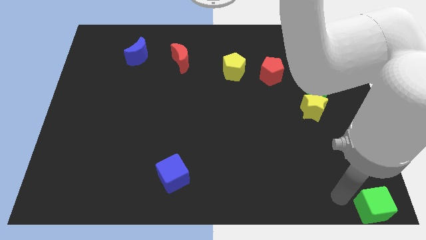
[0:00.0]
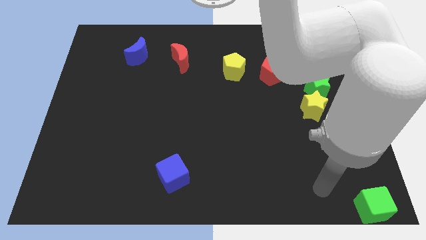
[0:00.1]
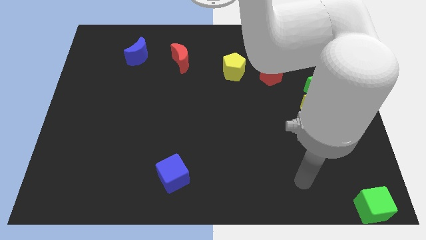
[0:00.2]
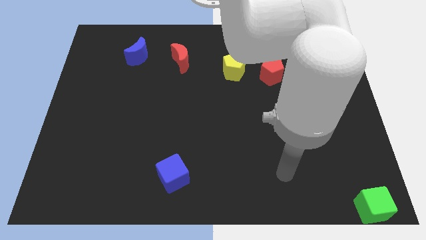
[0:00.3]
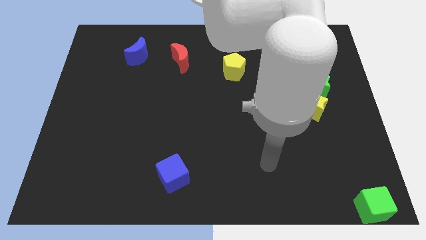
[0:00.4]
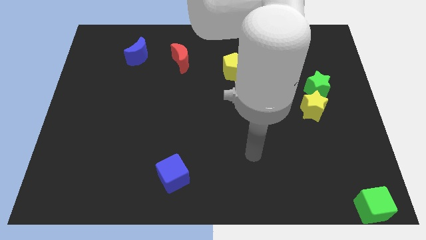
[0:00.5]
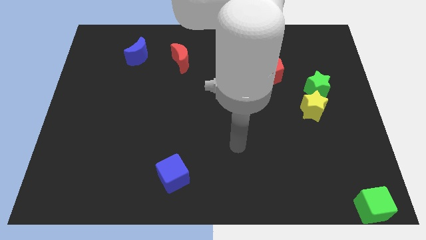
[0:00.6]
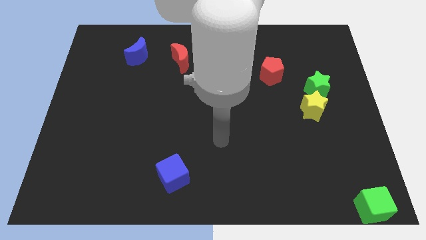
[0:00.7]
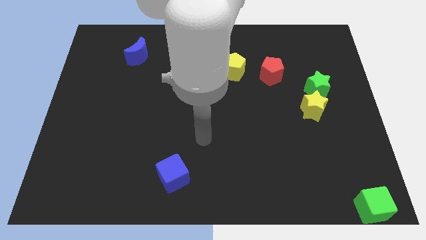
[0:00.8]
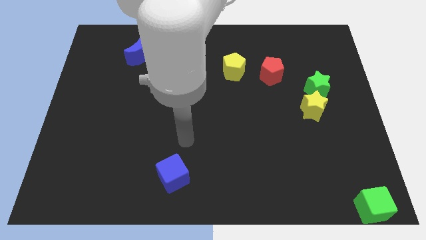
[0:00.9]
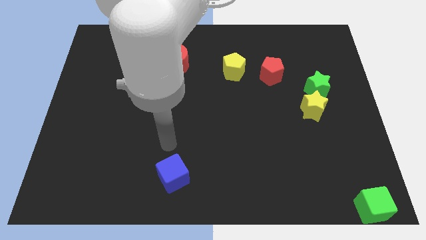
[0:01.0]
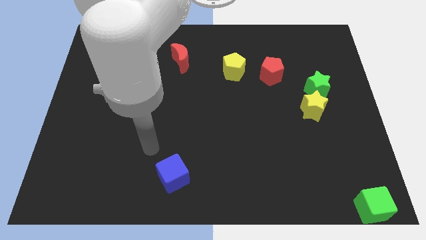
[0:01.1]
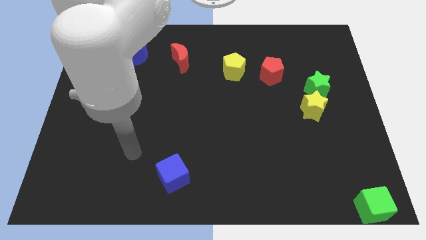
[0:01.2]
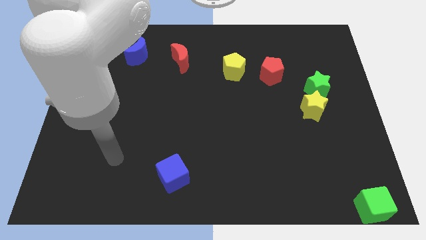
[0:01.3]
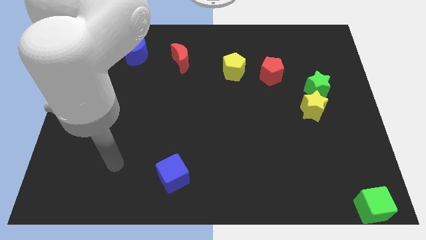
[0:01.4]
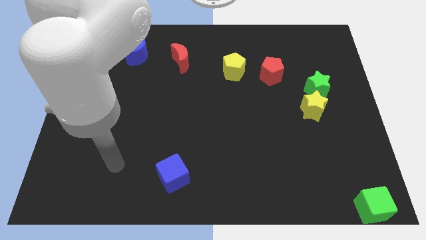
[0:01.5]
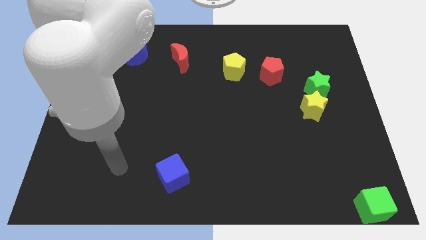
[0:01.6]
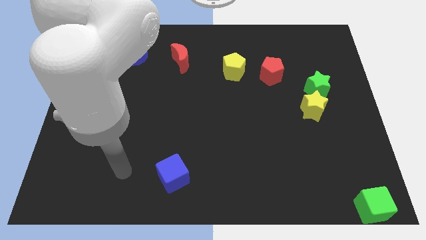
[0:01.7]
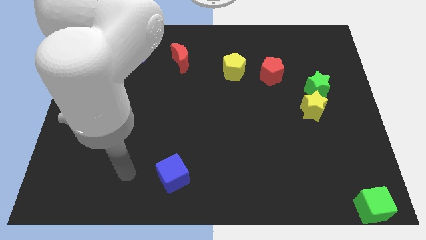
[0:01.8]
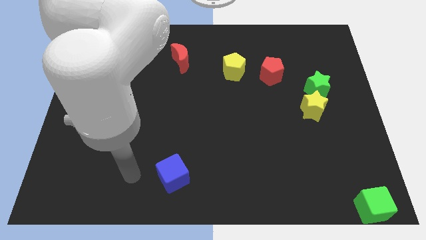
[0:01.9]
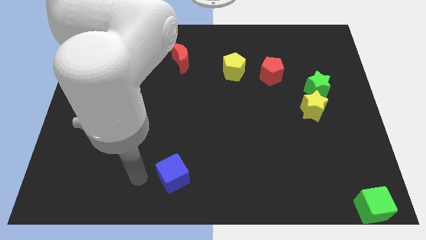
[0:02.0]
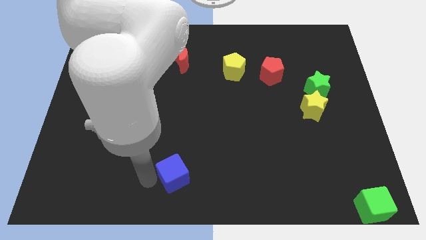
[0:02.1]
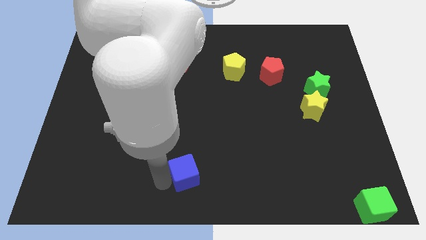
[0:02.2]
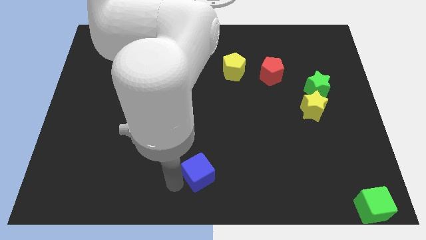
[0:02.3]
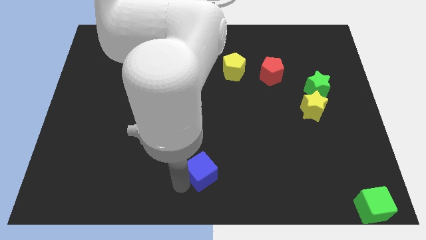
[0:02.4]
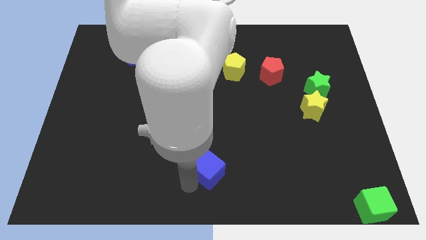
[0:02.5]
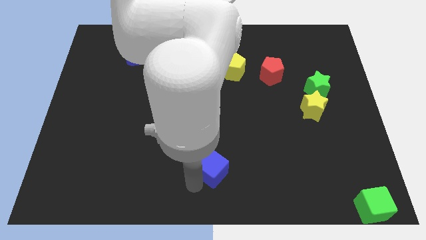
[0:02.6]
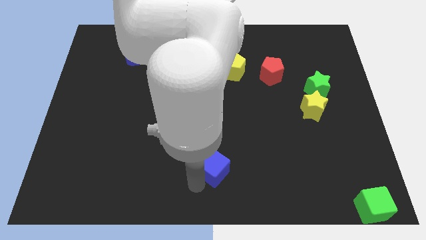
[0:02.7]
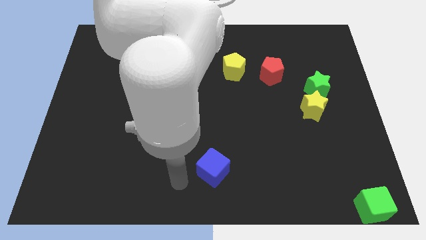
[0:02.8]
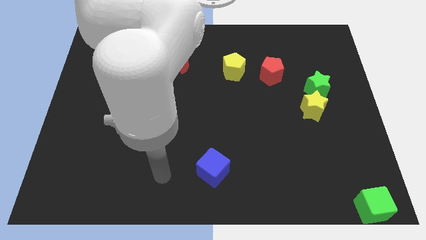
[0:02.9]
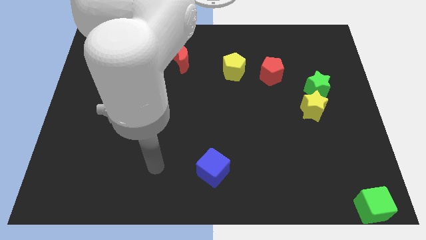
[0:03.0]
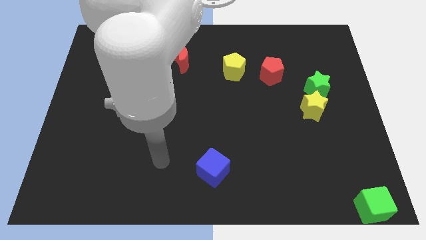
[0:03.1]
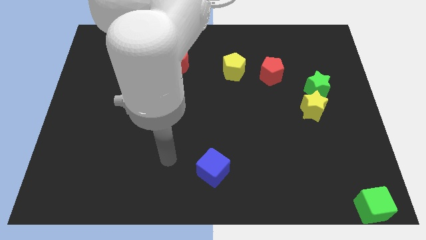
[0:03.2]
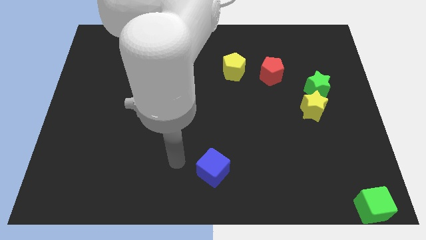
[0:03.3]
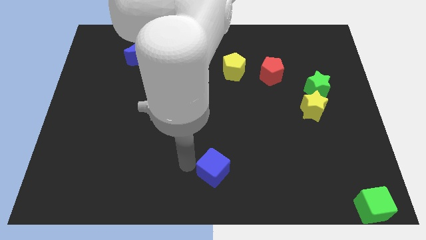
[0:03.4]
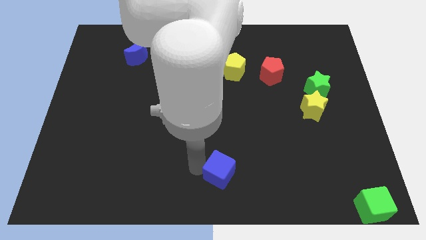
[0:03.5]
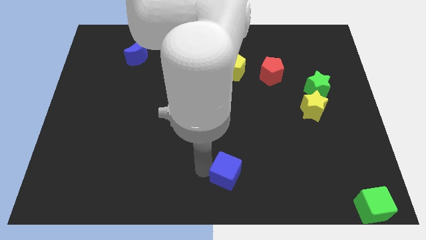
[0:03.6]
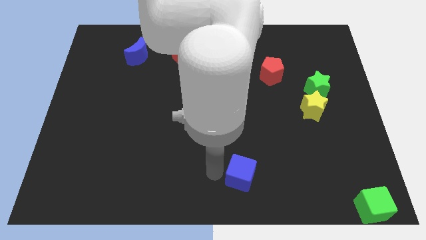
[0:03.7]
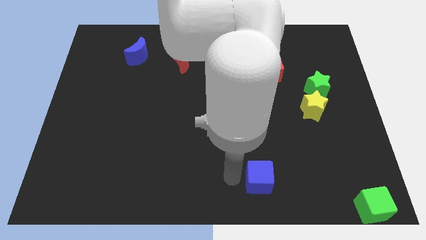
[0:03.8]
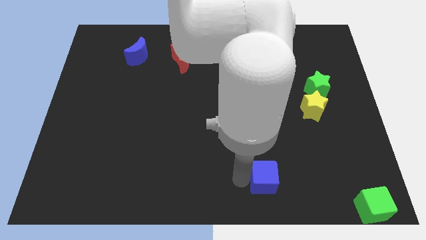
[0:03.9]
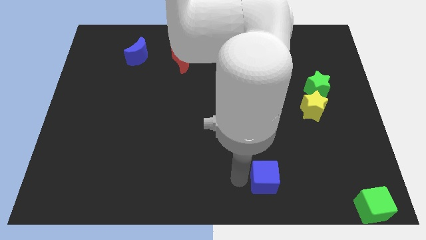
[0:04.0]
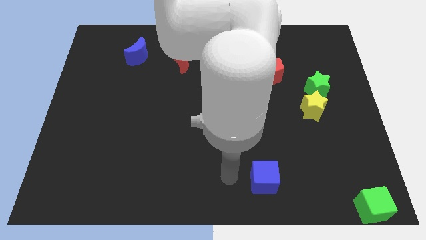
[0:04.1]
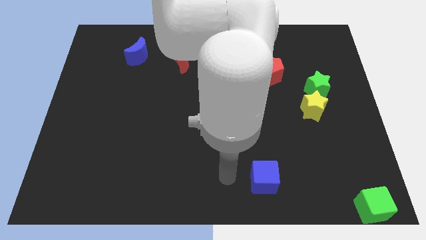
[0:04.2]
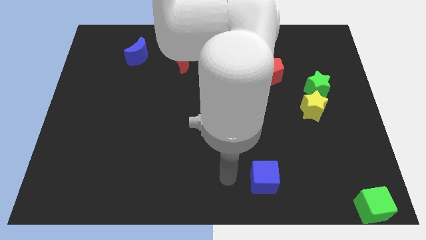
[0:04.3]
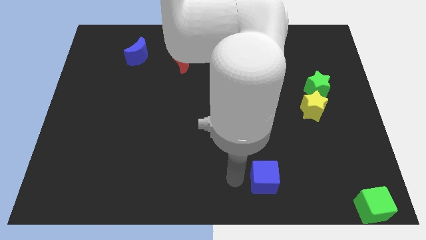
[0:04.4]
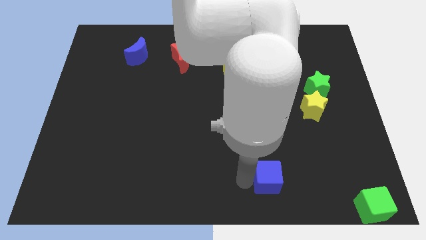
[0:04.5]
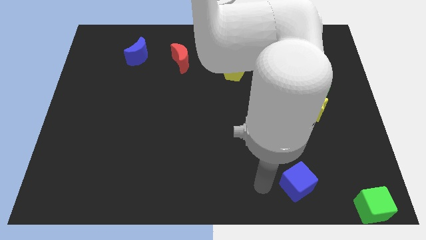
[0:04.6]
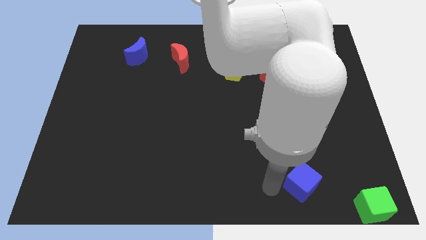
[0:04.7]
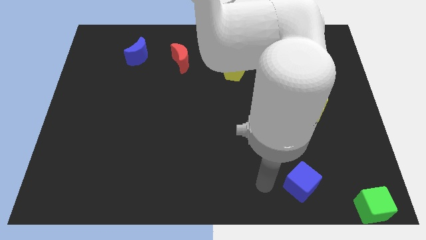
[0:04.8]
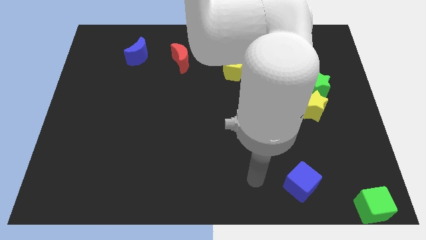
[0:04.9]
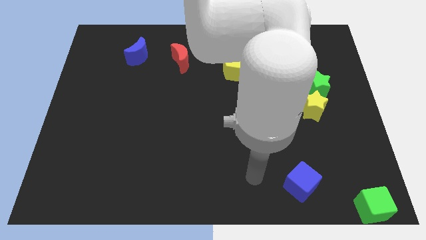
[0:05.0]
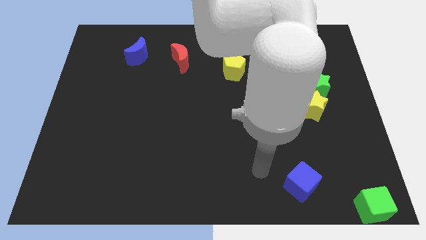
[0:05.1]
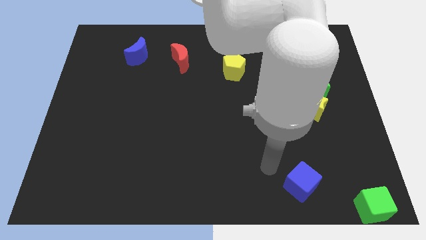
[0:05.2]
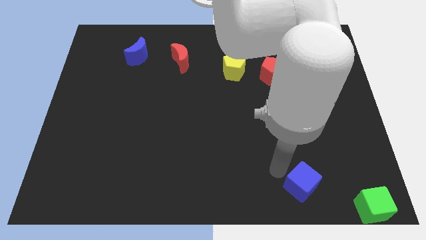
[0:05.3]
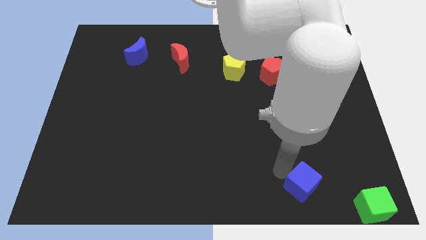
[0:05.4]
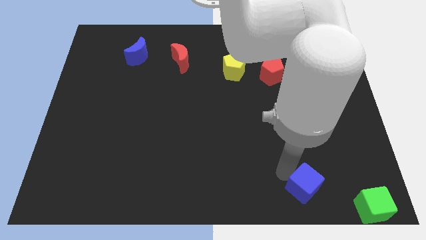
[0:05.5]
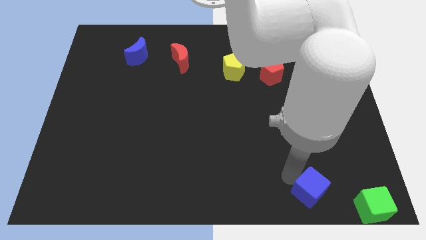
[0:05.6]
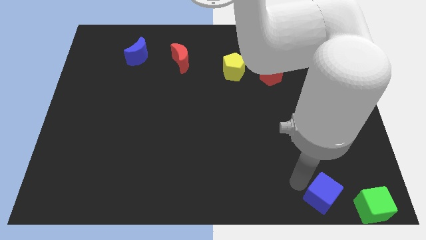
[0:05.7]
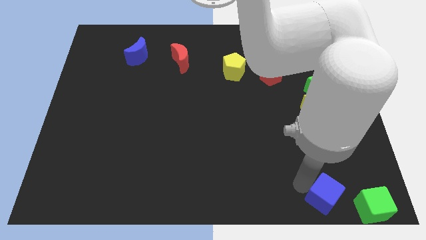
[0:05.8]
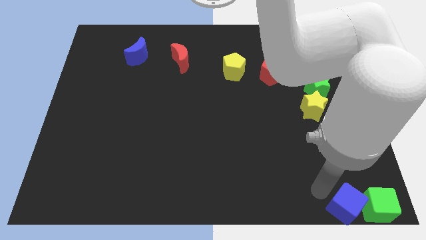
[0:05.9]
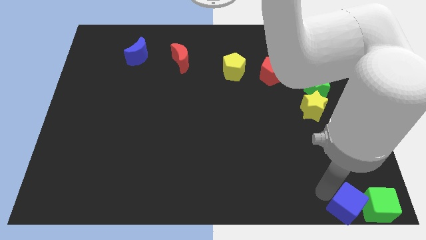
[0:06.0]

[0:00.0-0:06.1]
drag the blue cube into the left side of the green cube

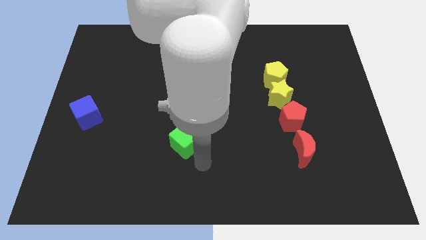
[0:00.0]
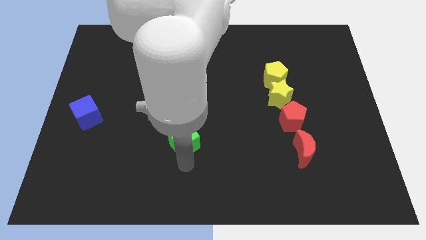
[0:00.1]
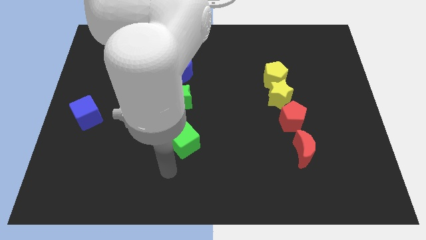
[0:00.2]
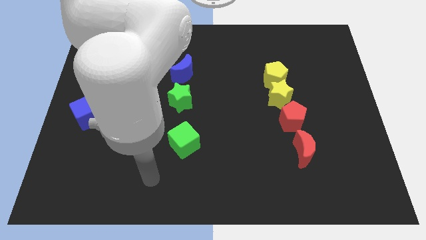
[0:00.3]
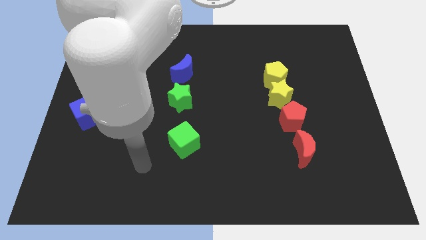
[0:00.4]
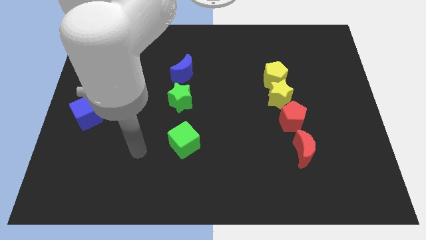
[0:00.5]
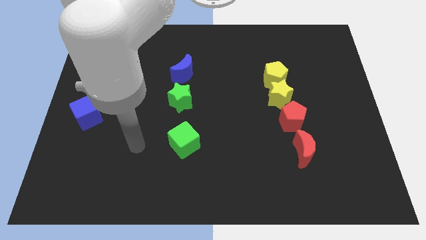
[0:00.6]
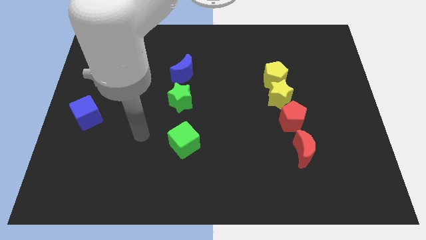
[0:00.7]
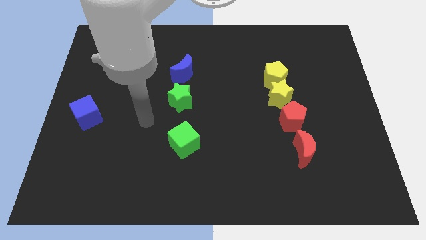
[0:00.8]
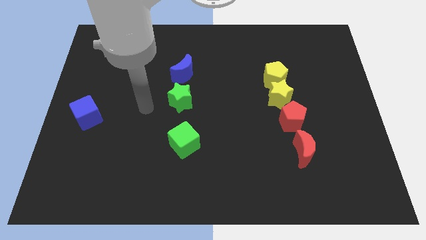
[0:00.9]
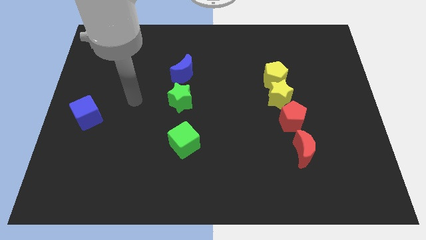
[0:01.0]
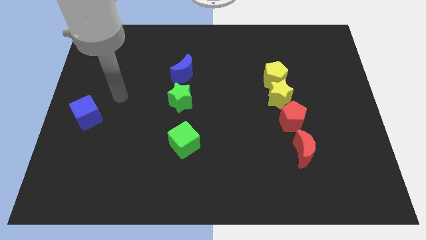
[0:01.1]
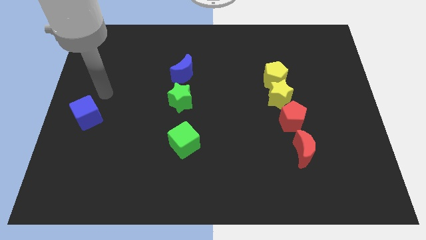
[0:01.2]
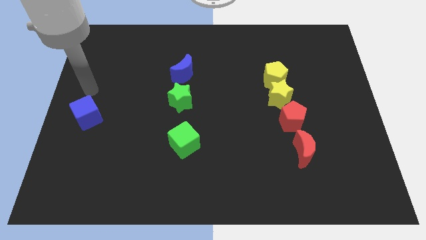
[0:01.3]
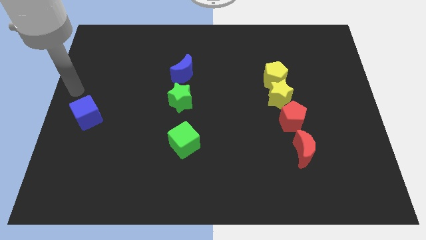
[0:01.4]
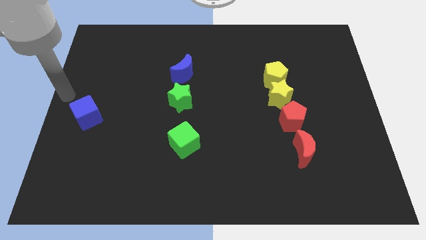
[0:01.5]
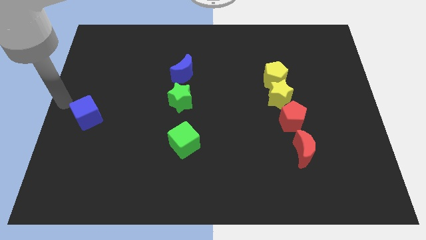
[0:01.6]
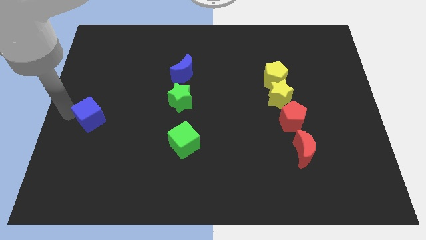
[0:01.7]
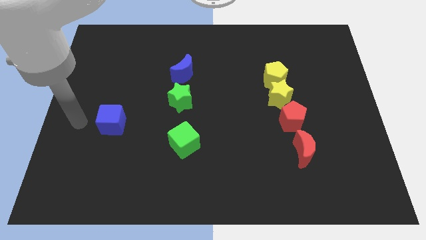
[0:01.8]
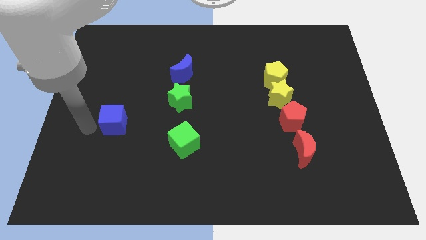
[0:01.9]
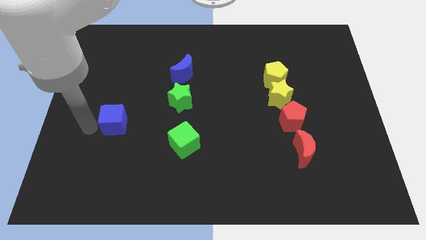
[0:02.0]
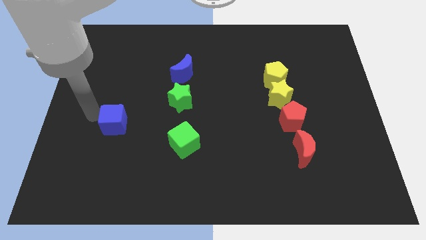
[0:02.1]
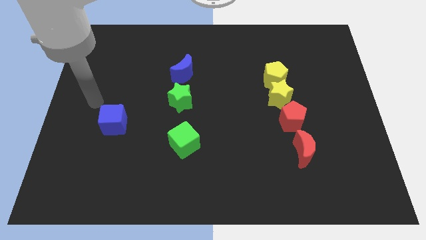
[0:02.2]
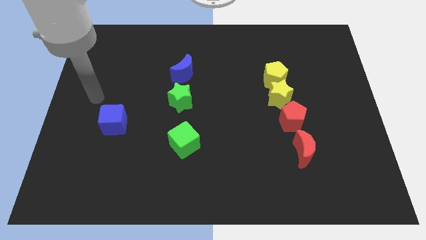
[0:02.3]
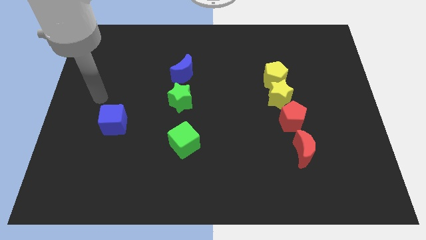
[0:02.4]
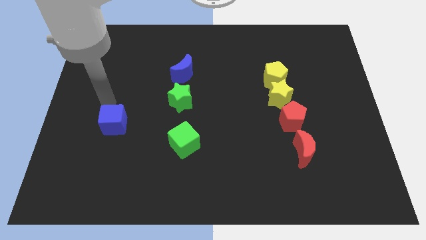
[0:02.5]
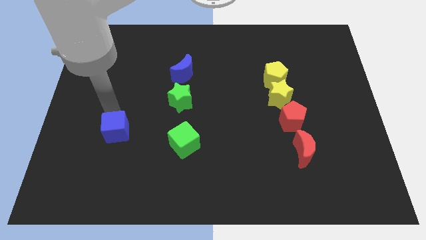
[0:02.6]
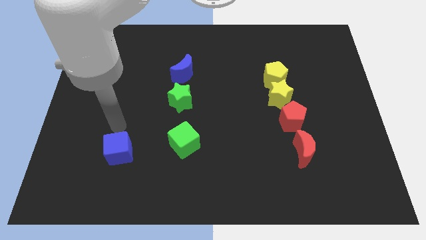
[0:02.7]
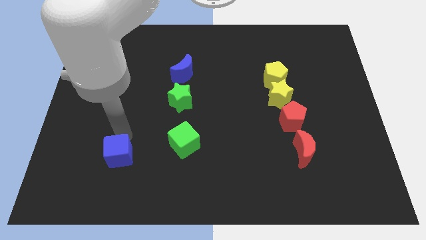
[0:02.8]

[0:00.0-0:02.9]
move the blue cube to the left side of the green cube
